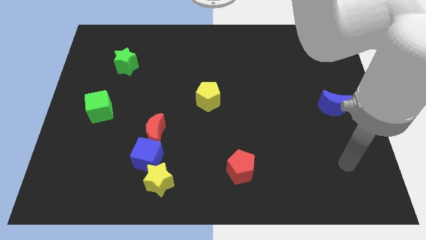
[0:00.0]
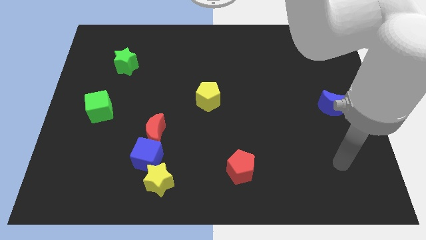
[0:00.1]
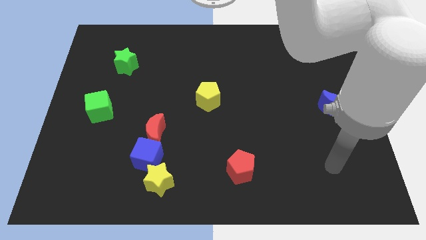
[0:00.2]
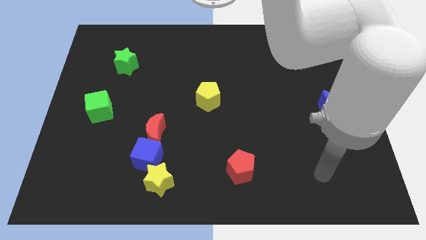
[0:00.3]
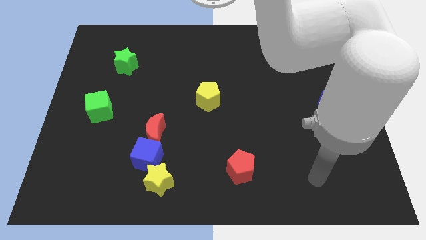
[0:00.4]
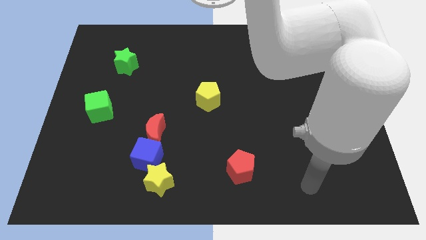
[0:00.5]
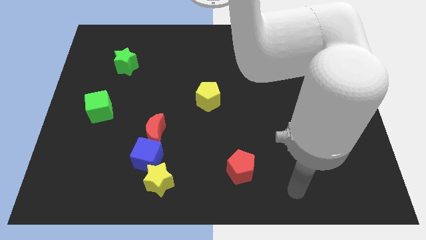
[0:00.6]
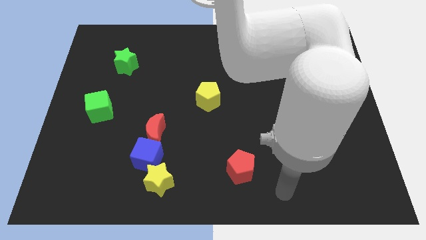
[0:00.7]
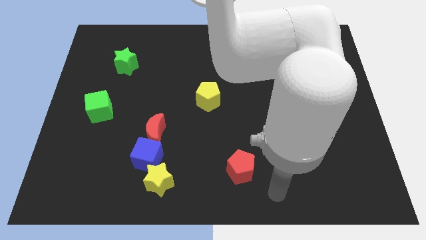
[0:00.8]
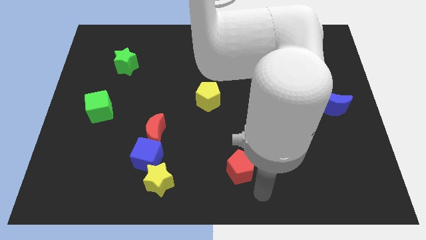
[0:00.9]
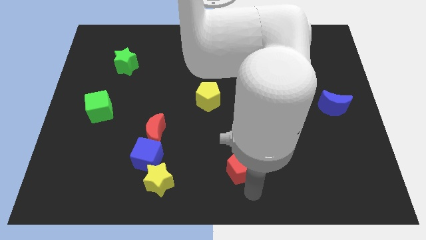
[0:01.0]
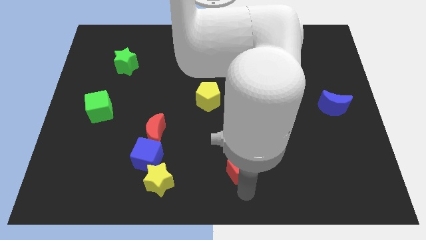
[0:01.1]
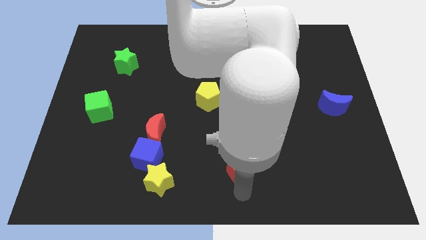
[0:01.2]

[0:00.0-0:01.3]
place your hand vertically below the red pentagon

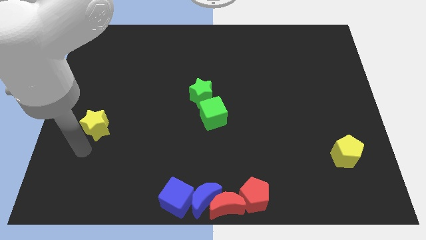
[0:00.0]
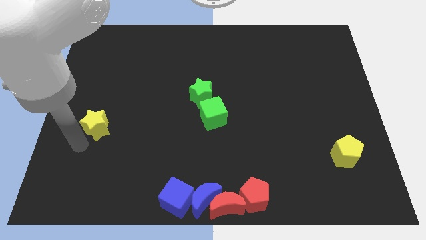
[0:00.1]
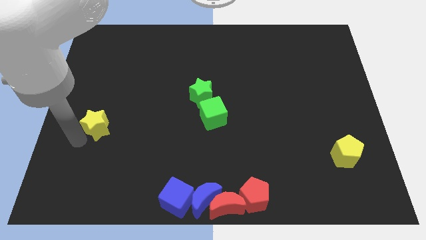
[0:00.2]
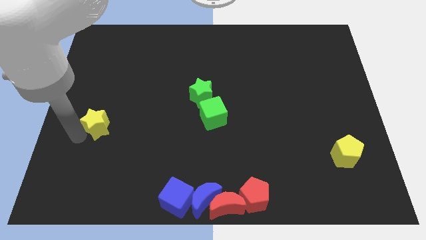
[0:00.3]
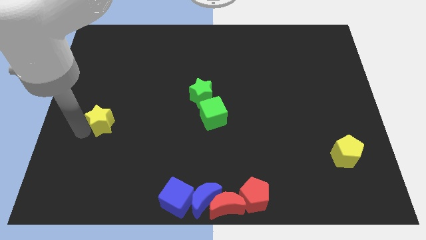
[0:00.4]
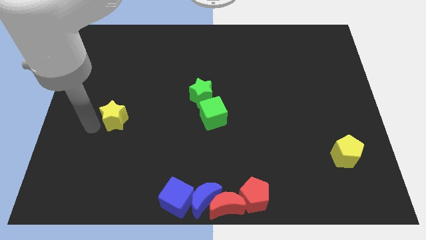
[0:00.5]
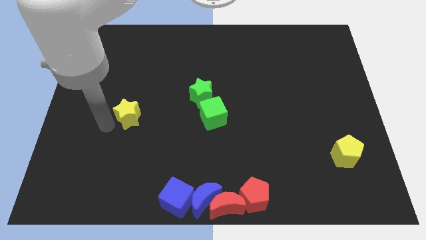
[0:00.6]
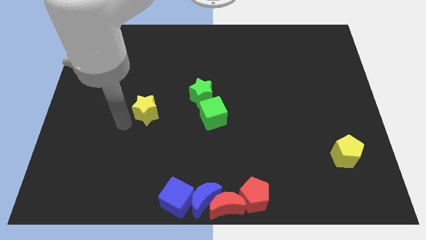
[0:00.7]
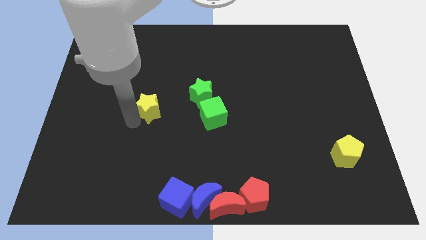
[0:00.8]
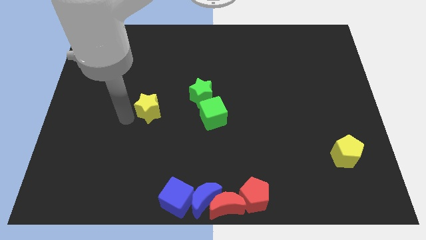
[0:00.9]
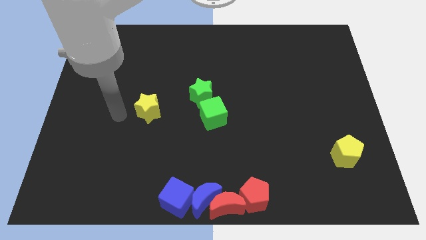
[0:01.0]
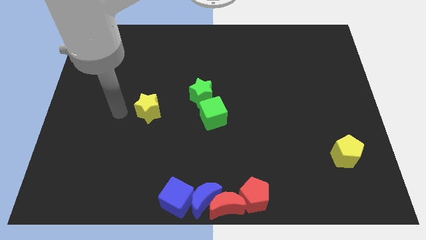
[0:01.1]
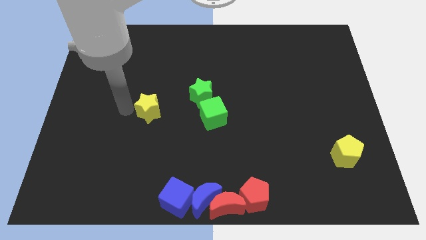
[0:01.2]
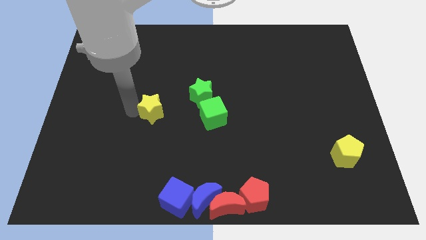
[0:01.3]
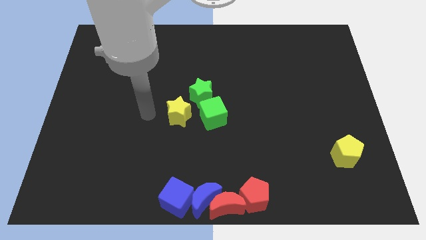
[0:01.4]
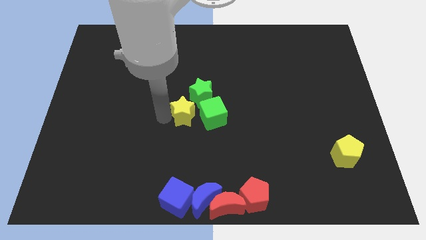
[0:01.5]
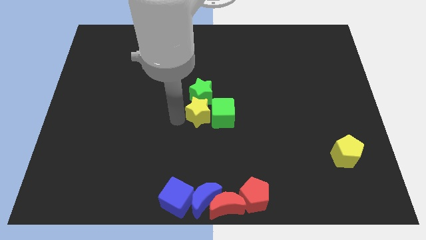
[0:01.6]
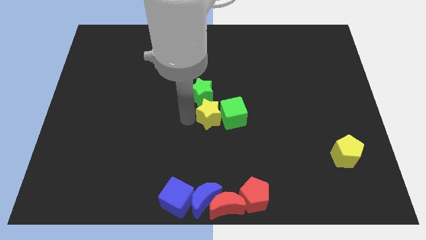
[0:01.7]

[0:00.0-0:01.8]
push the yellow star towards the center of the board

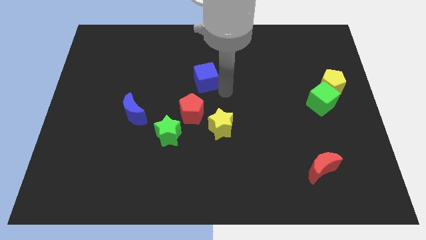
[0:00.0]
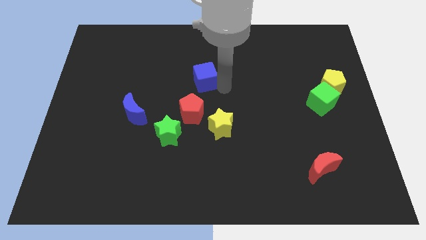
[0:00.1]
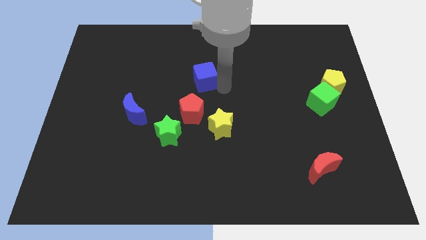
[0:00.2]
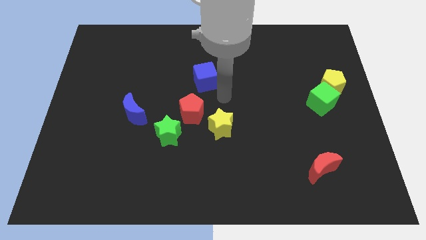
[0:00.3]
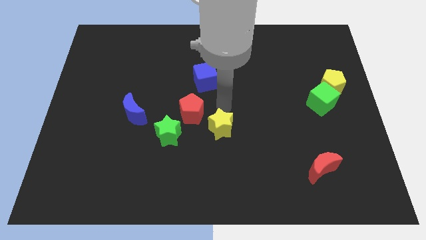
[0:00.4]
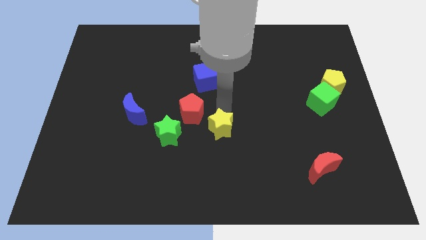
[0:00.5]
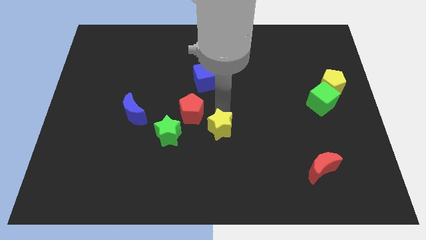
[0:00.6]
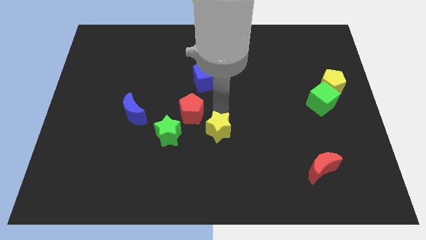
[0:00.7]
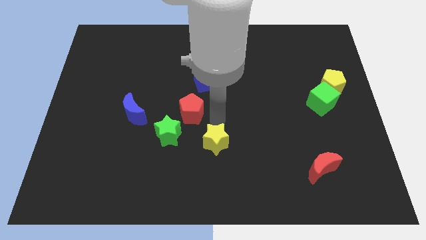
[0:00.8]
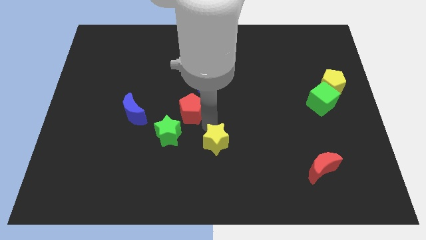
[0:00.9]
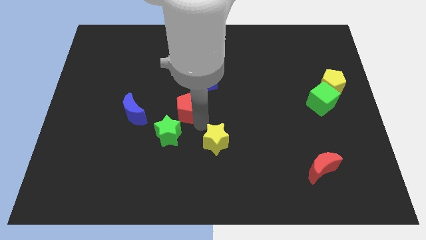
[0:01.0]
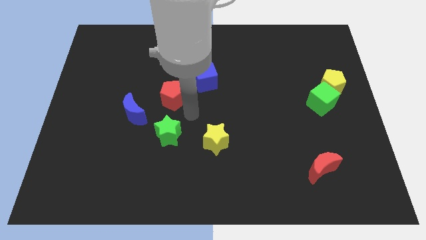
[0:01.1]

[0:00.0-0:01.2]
push the yellow star to the down

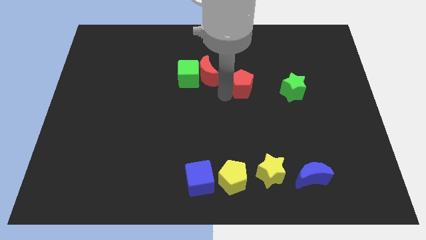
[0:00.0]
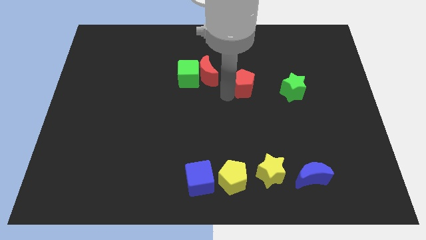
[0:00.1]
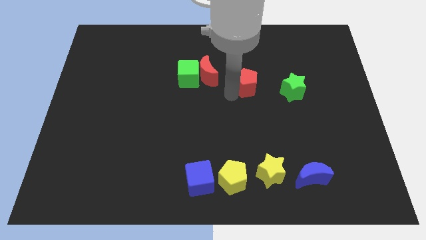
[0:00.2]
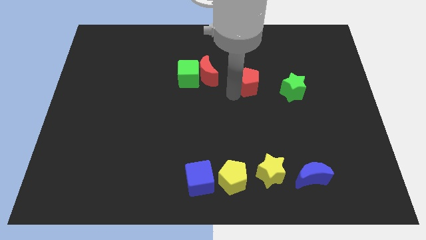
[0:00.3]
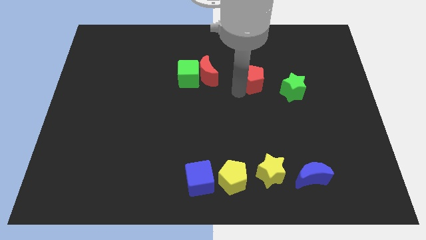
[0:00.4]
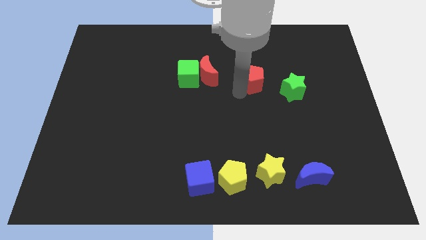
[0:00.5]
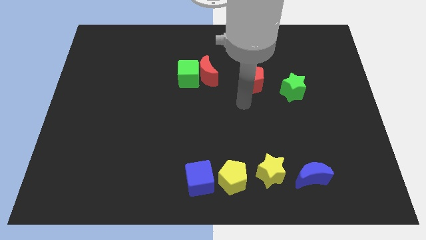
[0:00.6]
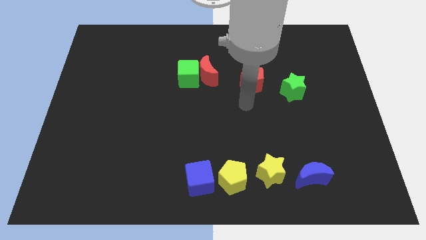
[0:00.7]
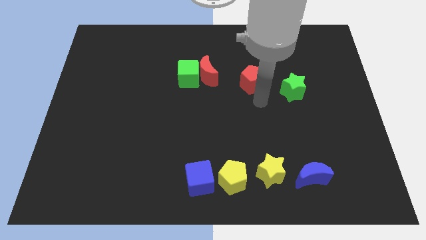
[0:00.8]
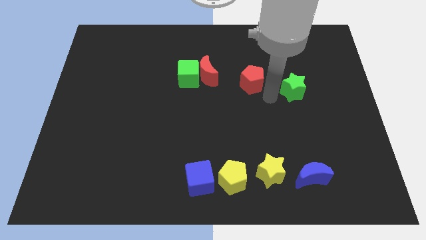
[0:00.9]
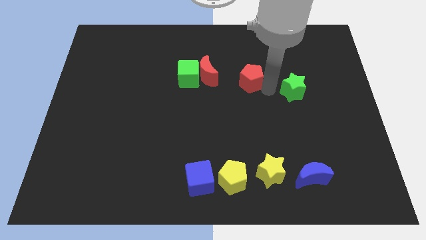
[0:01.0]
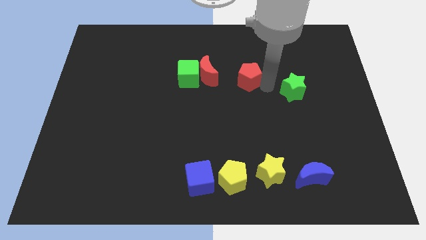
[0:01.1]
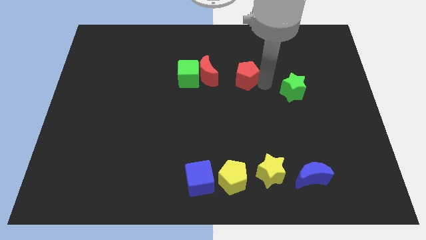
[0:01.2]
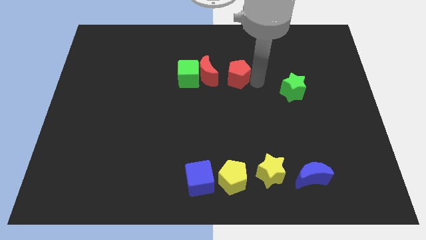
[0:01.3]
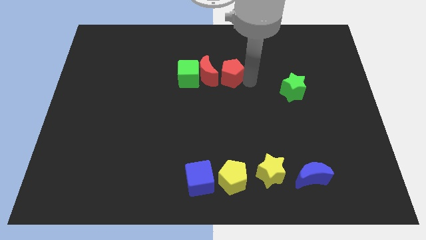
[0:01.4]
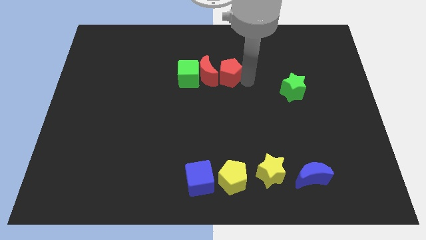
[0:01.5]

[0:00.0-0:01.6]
push the red pentagon closer to the red moon

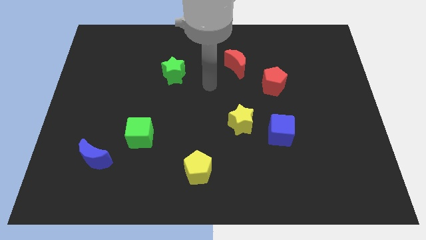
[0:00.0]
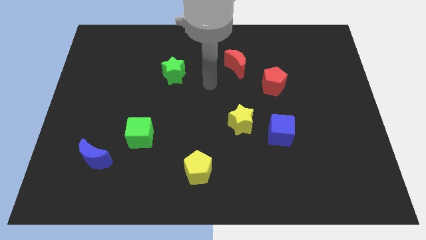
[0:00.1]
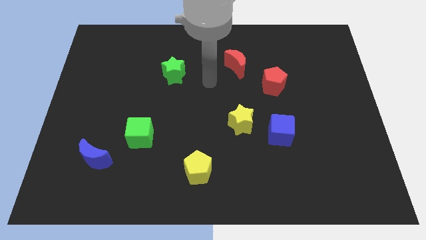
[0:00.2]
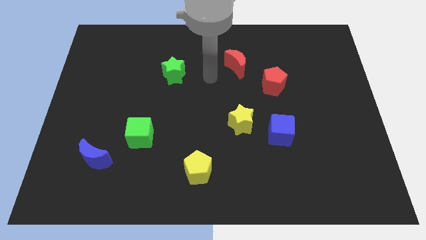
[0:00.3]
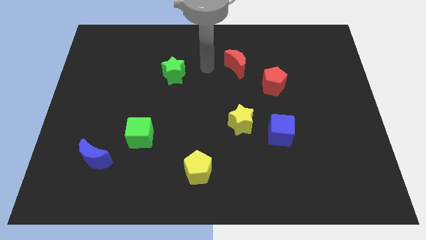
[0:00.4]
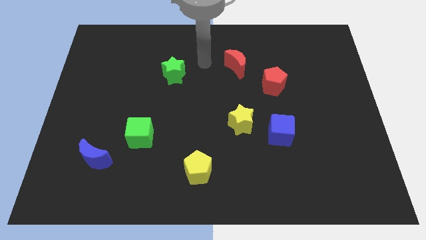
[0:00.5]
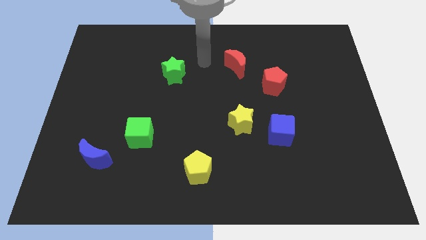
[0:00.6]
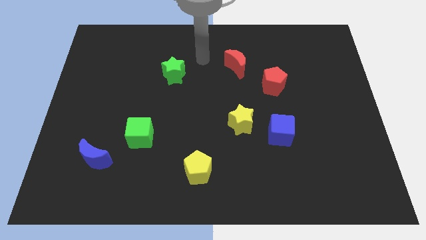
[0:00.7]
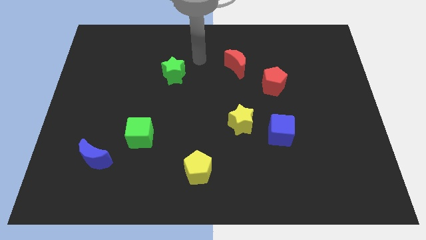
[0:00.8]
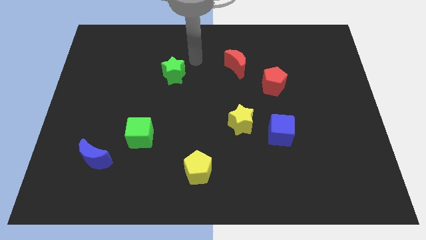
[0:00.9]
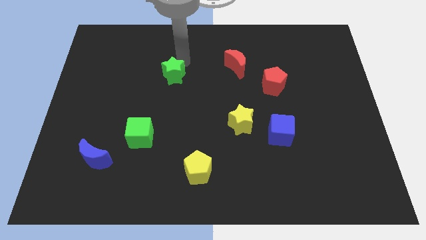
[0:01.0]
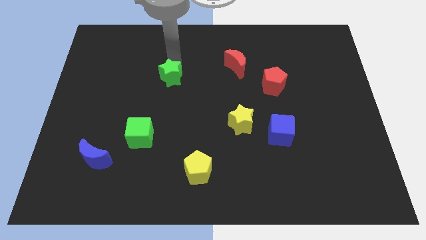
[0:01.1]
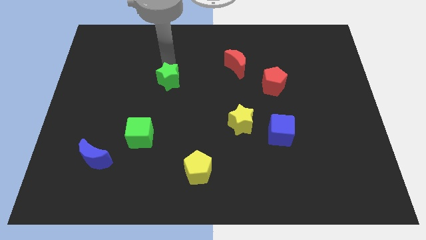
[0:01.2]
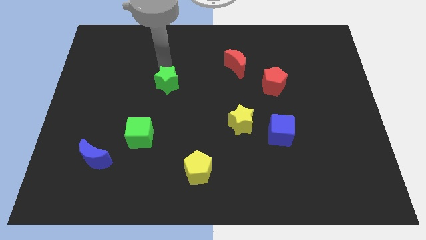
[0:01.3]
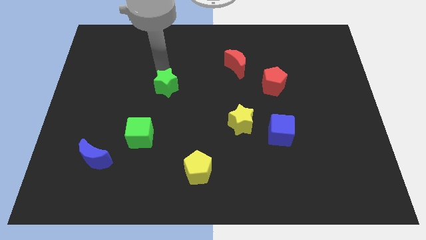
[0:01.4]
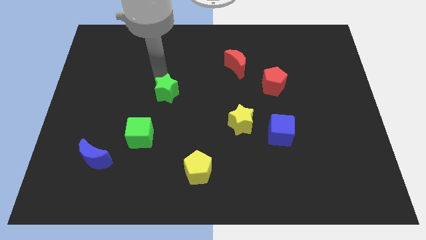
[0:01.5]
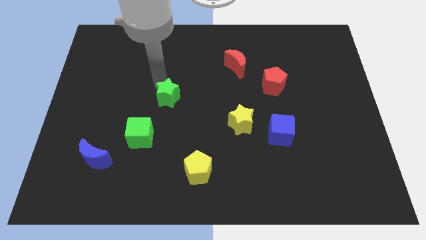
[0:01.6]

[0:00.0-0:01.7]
drag the green star diagonally on the top right side of the green cube

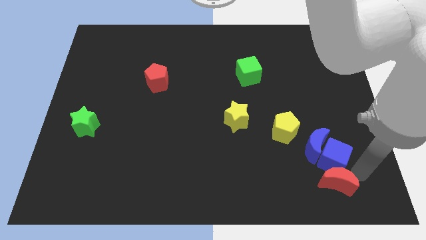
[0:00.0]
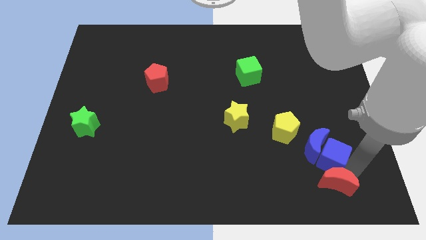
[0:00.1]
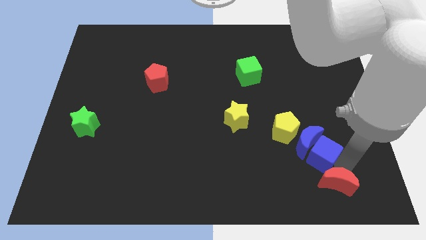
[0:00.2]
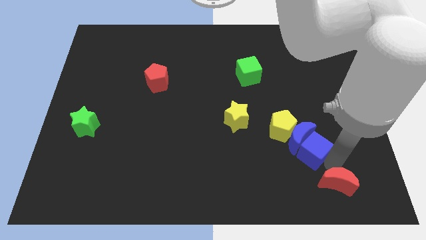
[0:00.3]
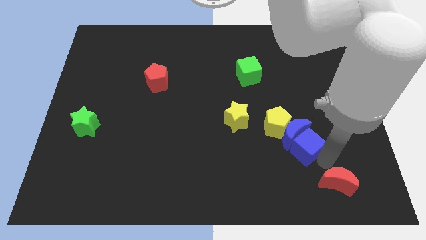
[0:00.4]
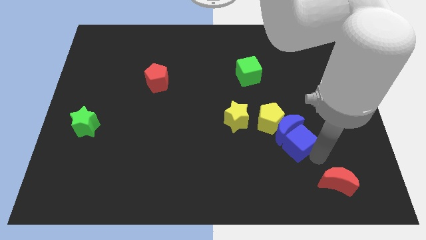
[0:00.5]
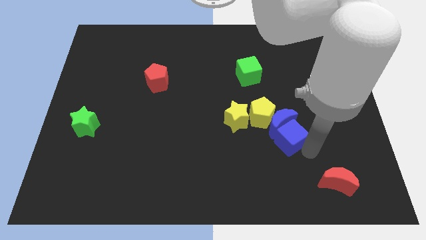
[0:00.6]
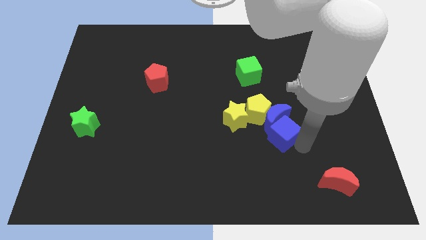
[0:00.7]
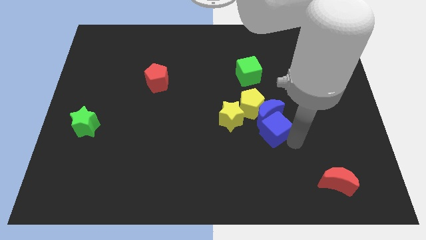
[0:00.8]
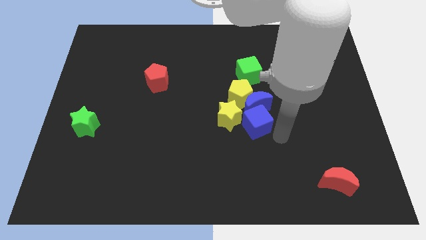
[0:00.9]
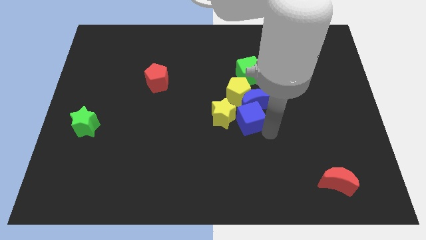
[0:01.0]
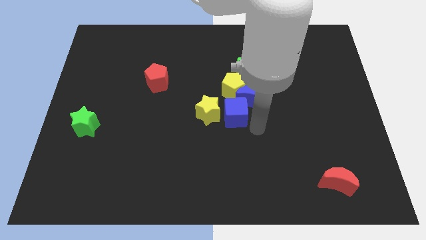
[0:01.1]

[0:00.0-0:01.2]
slide both the blue blocks diagonal to both the yellow blocks

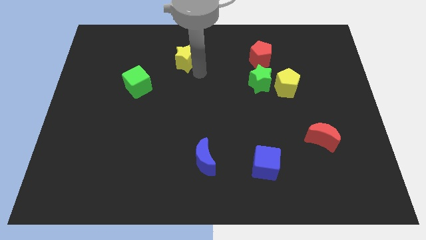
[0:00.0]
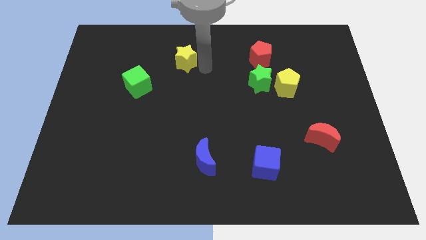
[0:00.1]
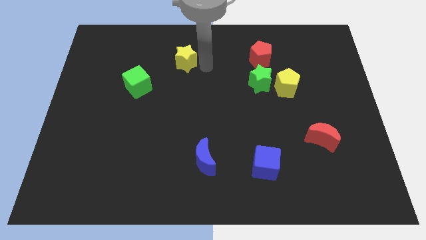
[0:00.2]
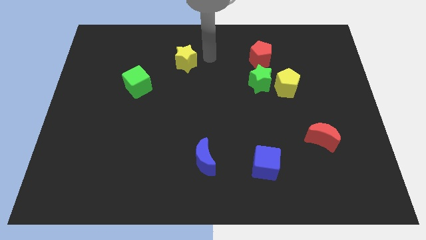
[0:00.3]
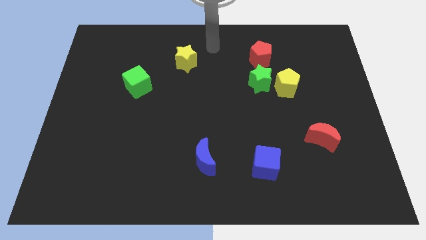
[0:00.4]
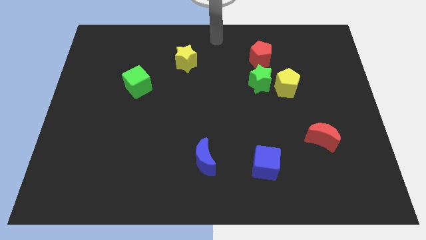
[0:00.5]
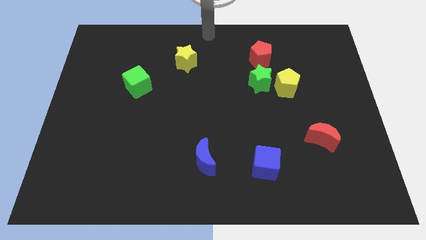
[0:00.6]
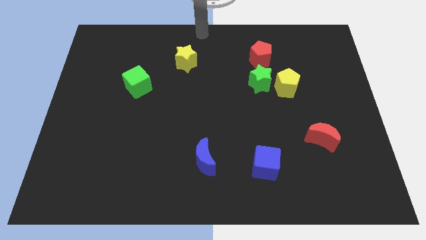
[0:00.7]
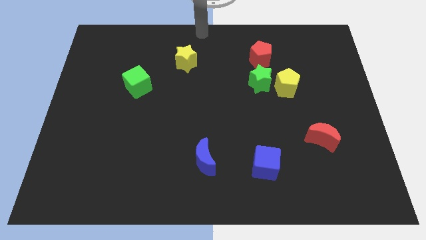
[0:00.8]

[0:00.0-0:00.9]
move arm at center top
